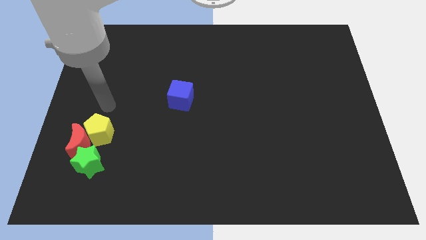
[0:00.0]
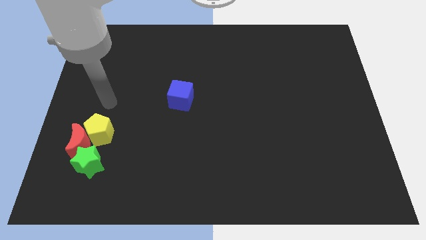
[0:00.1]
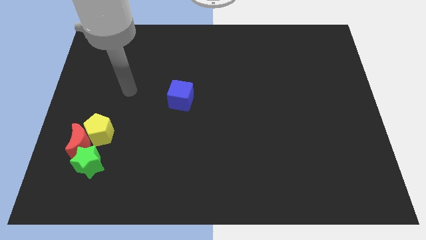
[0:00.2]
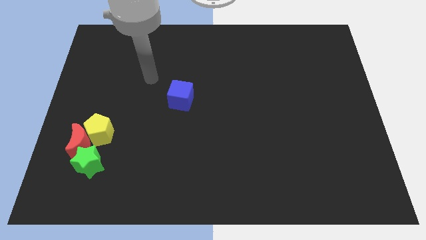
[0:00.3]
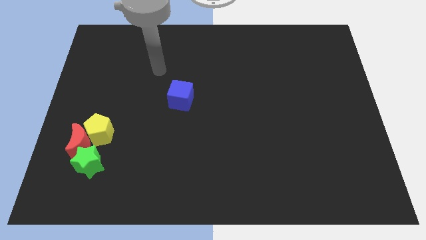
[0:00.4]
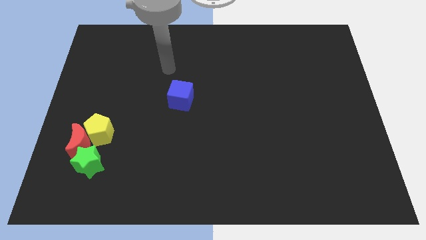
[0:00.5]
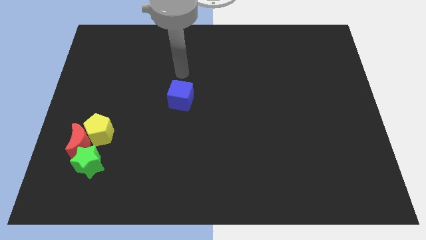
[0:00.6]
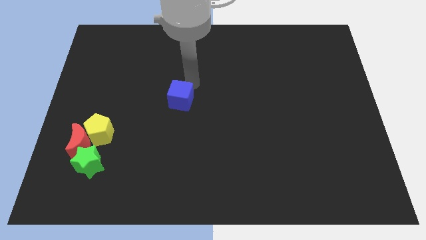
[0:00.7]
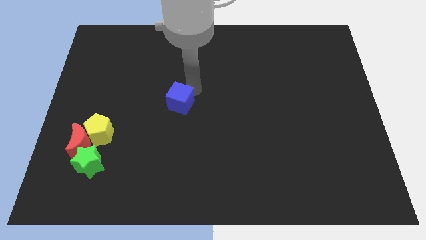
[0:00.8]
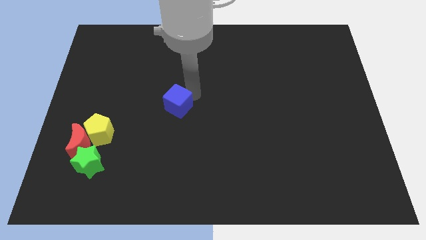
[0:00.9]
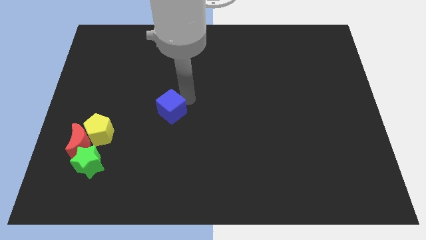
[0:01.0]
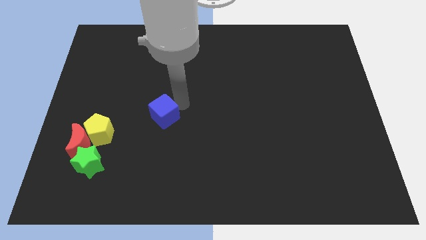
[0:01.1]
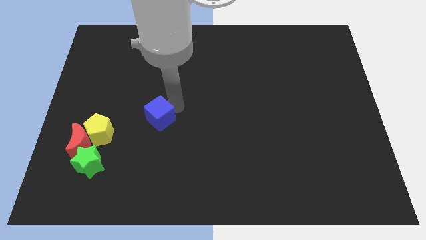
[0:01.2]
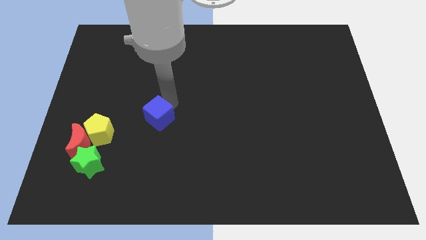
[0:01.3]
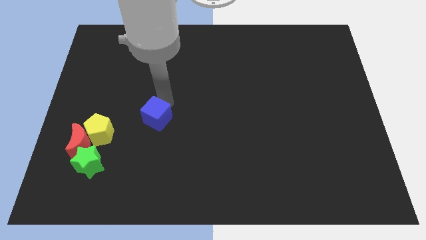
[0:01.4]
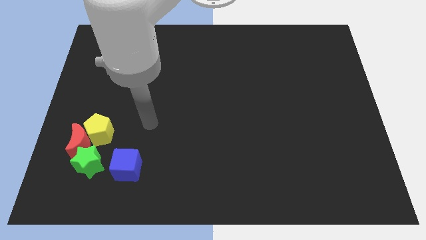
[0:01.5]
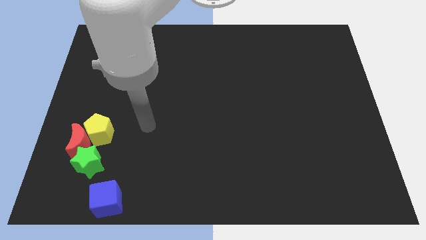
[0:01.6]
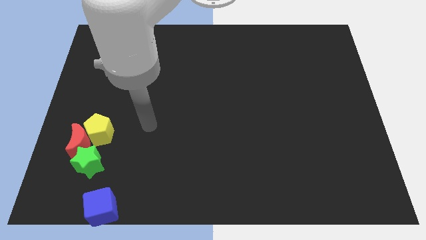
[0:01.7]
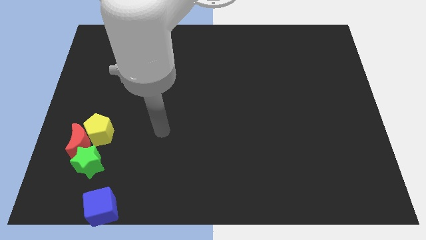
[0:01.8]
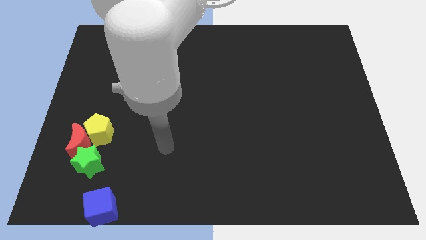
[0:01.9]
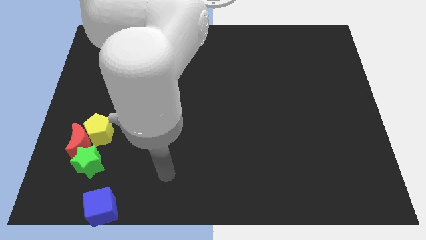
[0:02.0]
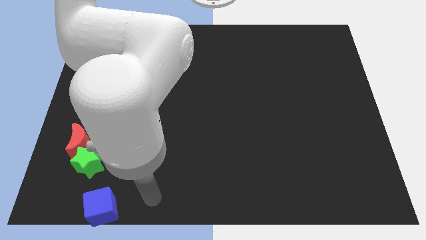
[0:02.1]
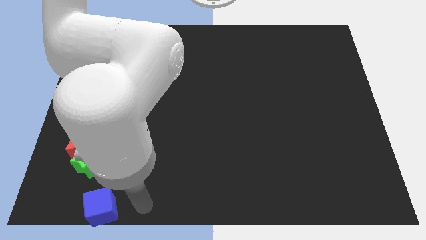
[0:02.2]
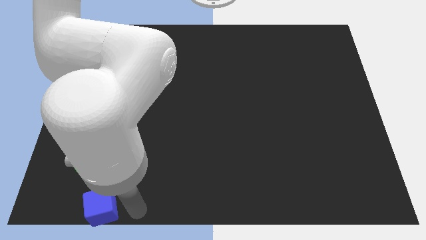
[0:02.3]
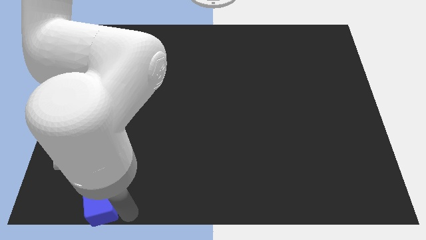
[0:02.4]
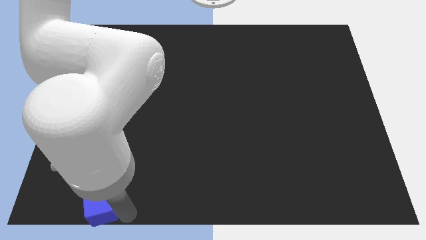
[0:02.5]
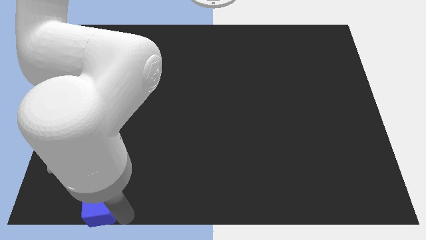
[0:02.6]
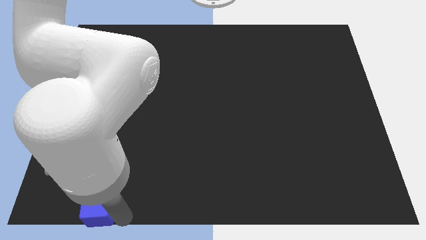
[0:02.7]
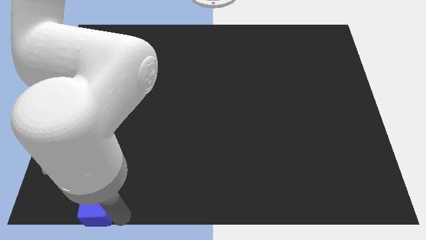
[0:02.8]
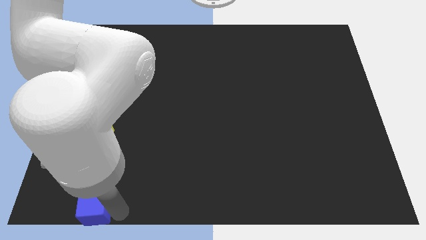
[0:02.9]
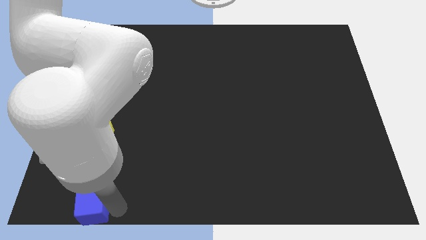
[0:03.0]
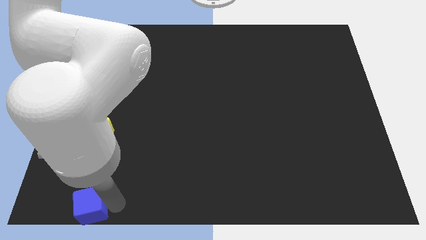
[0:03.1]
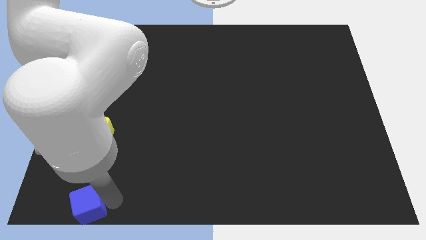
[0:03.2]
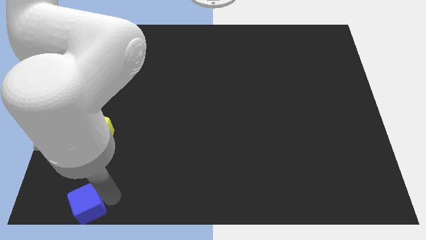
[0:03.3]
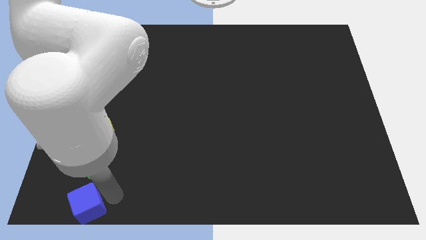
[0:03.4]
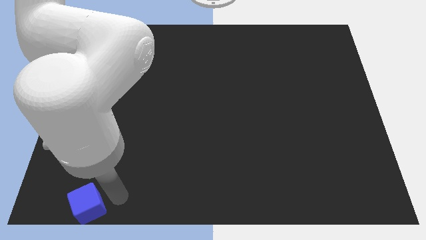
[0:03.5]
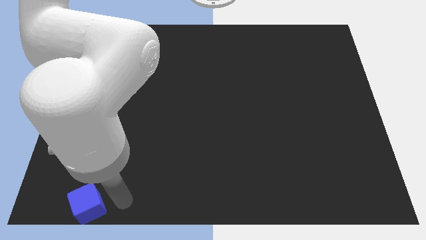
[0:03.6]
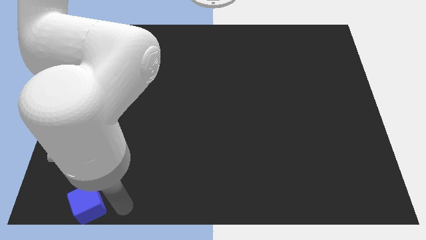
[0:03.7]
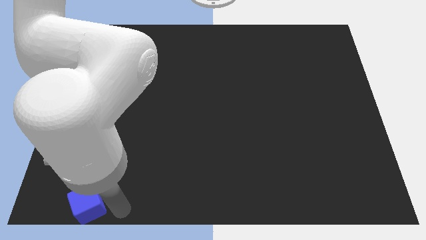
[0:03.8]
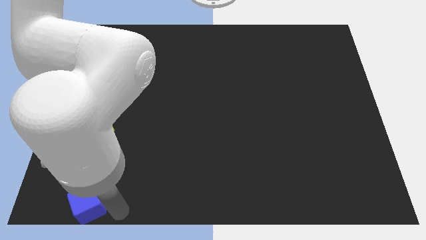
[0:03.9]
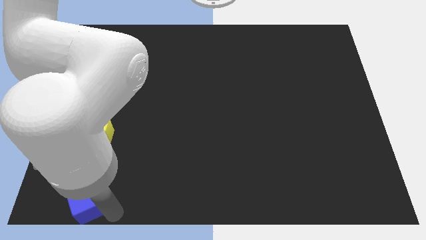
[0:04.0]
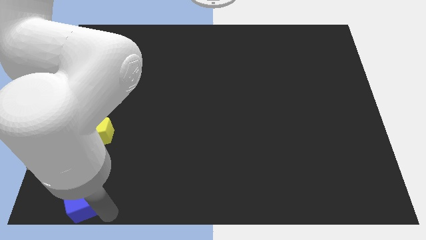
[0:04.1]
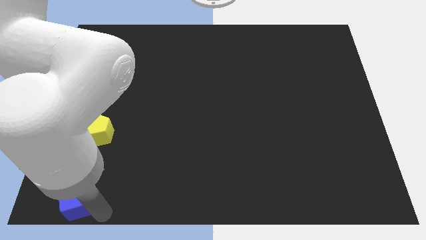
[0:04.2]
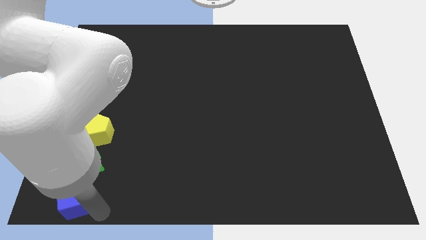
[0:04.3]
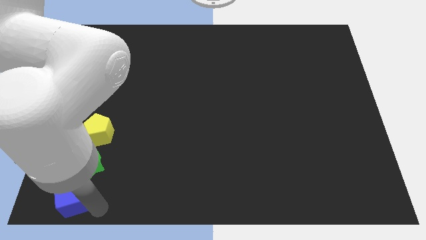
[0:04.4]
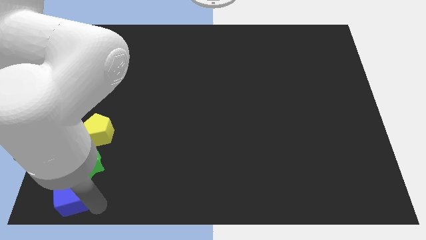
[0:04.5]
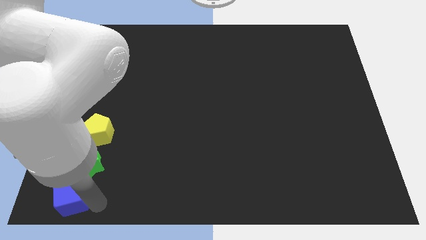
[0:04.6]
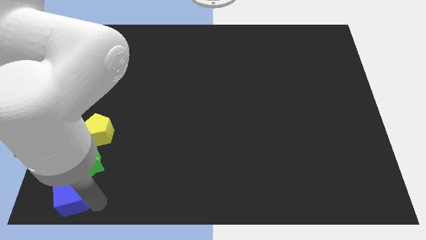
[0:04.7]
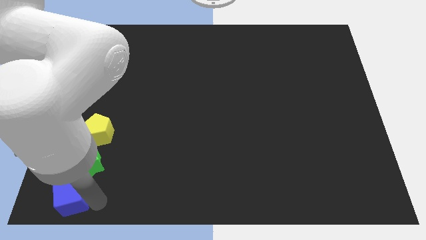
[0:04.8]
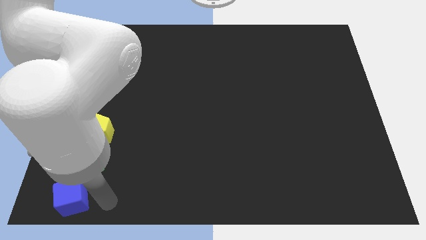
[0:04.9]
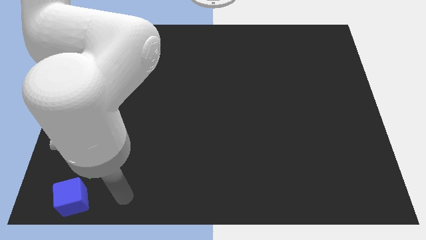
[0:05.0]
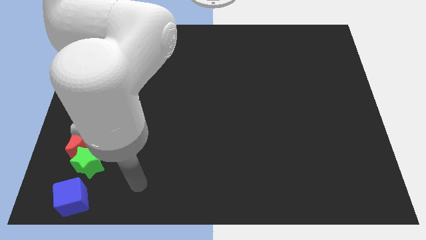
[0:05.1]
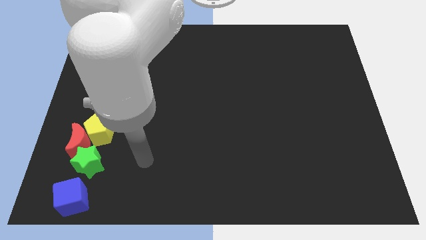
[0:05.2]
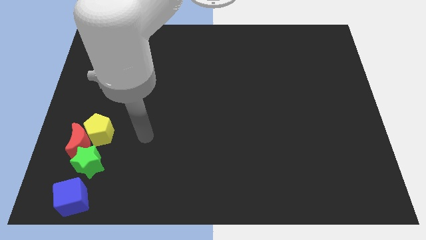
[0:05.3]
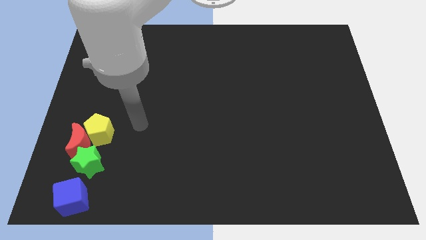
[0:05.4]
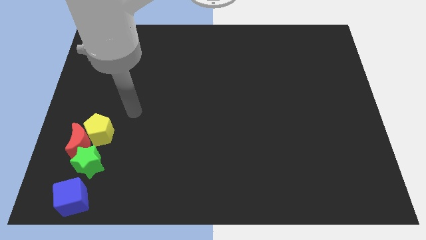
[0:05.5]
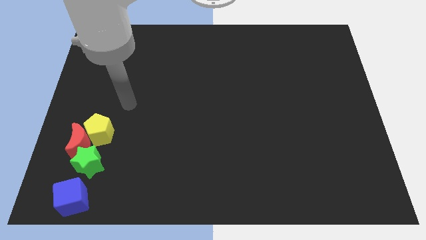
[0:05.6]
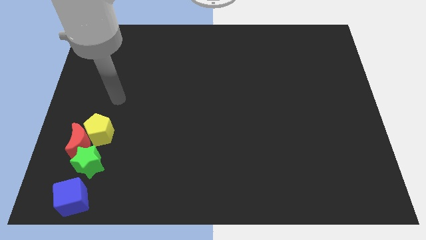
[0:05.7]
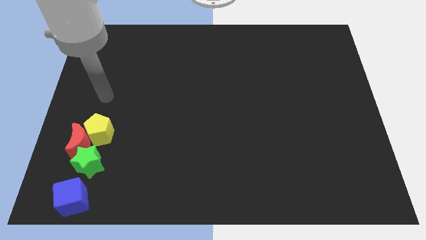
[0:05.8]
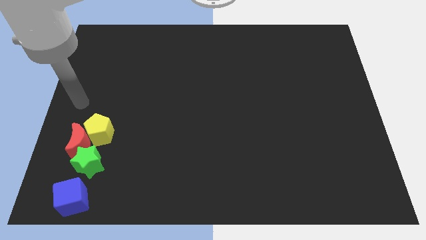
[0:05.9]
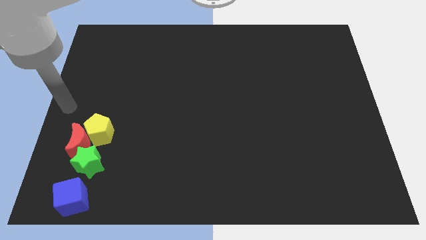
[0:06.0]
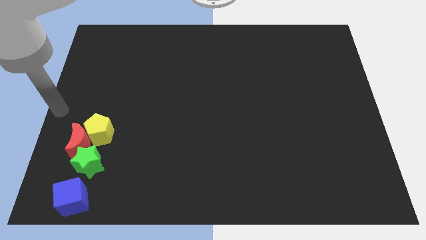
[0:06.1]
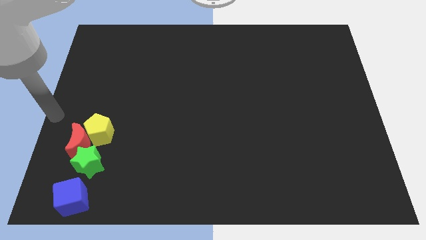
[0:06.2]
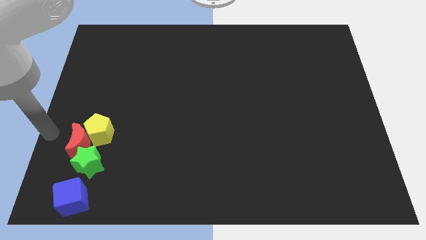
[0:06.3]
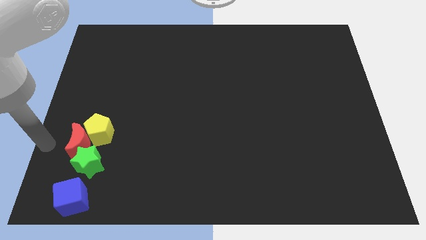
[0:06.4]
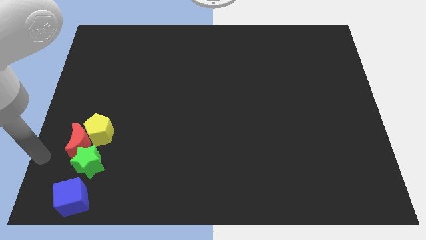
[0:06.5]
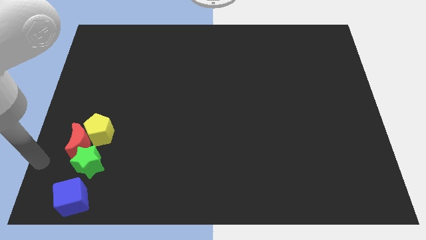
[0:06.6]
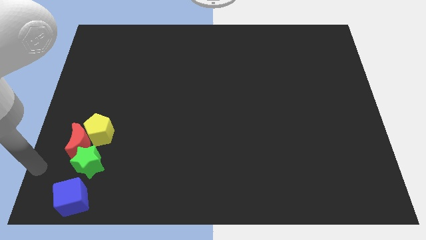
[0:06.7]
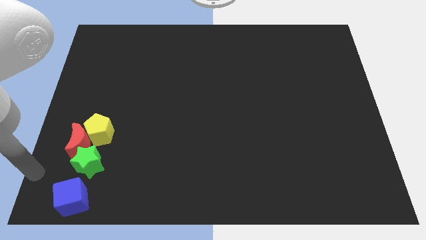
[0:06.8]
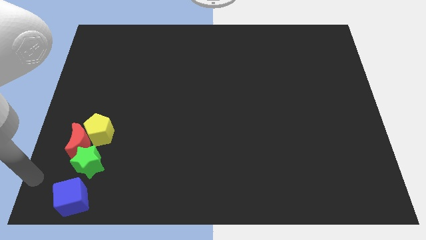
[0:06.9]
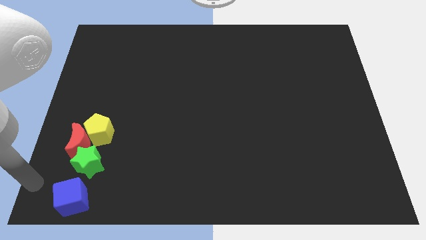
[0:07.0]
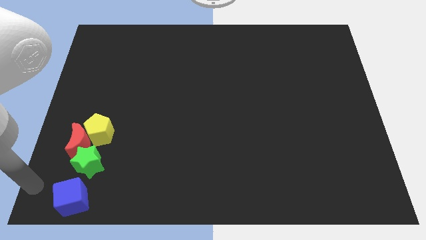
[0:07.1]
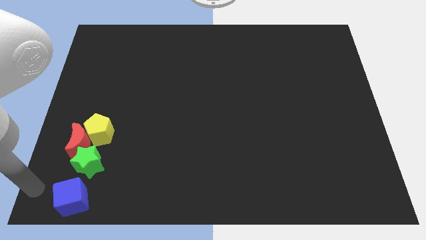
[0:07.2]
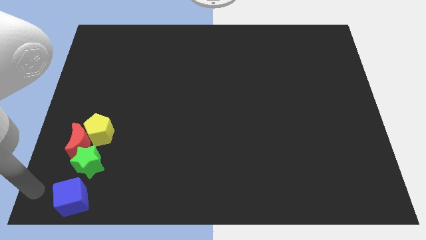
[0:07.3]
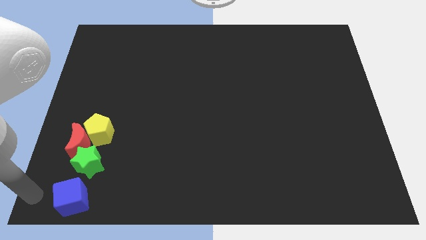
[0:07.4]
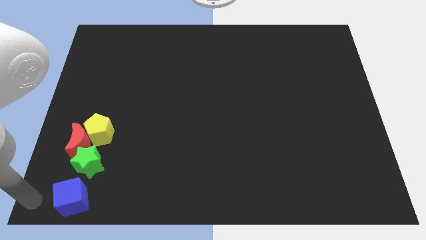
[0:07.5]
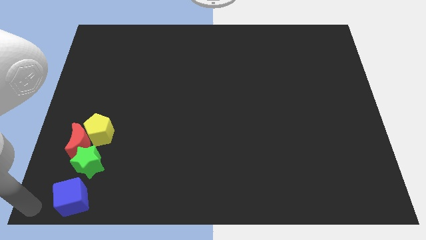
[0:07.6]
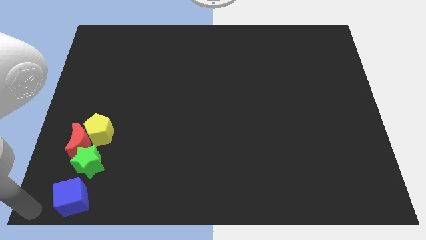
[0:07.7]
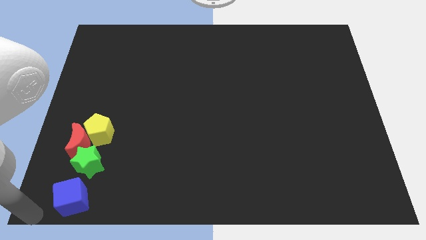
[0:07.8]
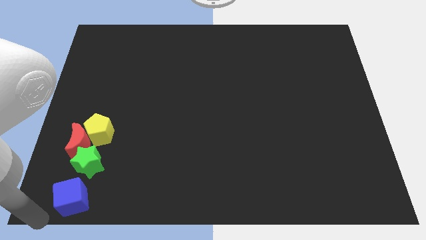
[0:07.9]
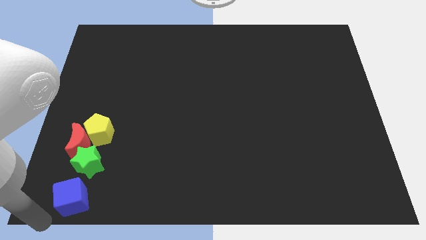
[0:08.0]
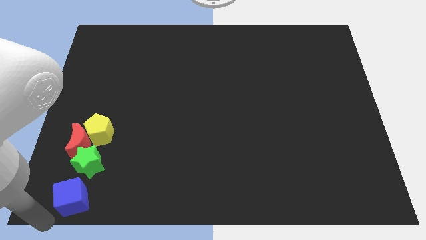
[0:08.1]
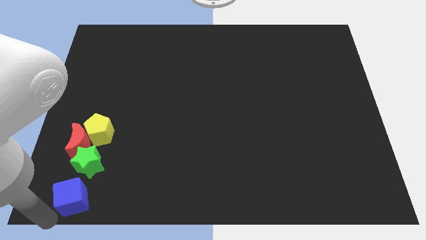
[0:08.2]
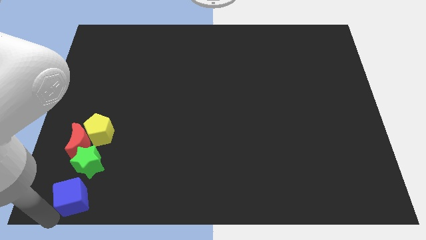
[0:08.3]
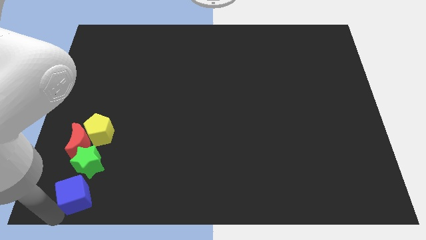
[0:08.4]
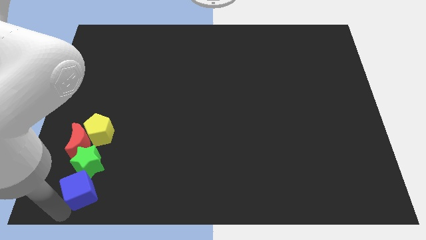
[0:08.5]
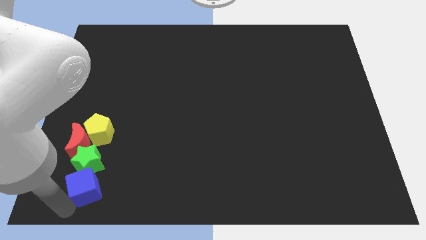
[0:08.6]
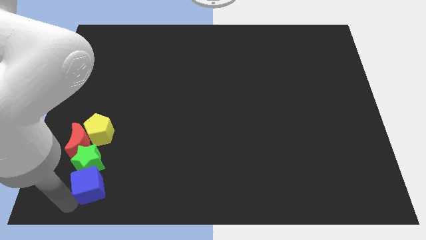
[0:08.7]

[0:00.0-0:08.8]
push the blue block close to the green star
